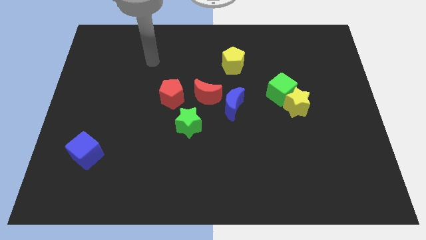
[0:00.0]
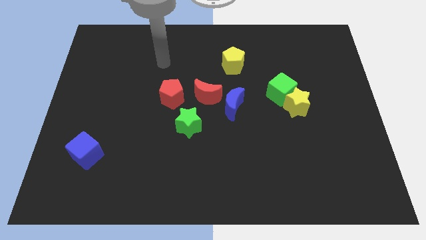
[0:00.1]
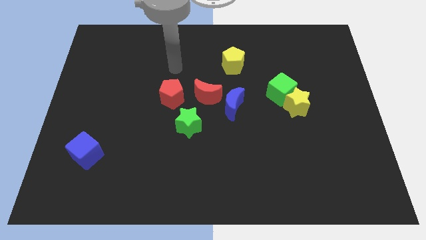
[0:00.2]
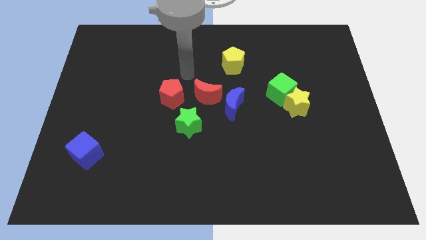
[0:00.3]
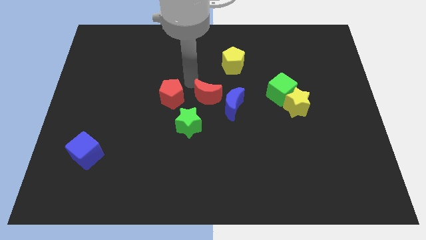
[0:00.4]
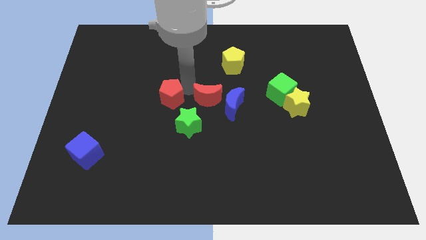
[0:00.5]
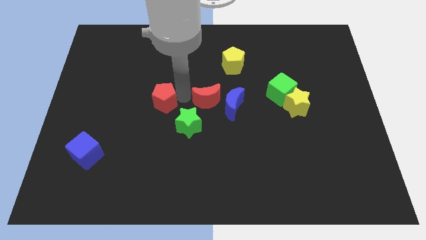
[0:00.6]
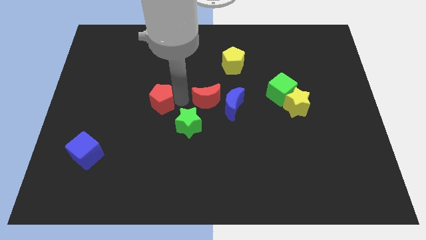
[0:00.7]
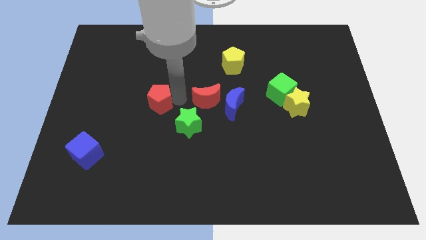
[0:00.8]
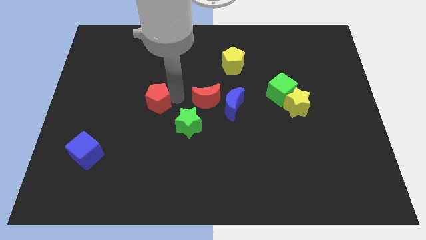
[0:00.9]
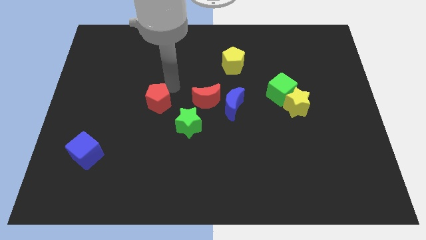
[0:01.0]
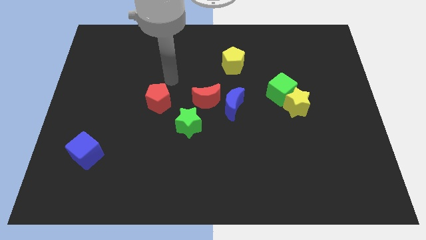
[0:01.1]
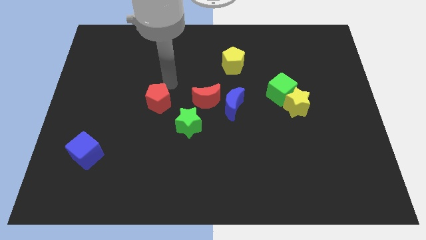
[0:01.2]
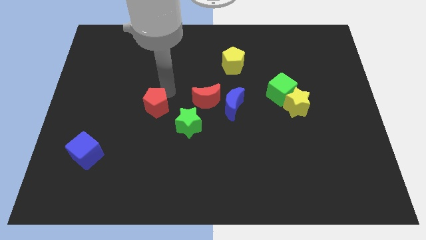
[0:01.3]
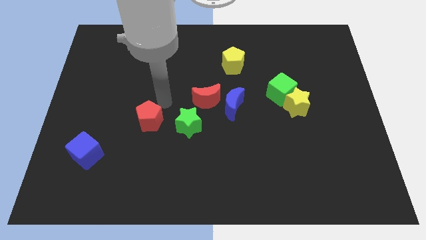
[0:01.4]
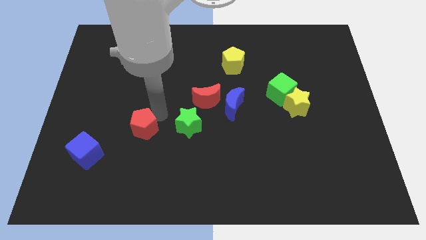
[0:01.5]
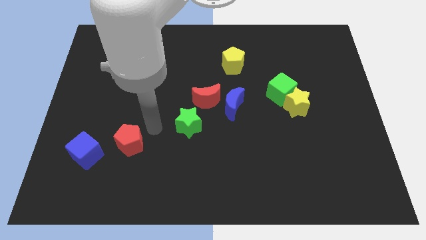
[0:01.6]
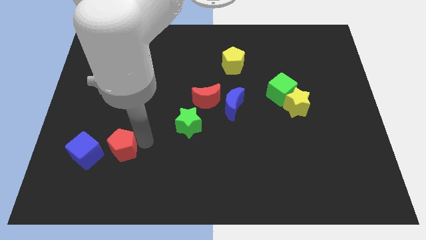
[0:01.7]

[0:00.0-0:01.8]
push the red pentagon towards the blue cube

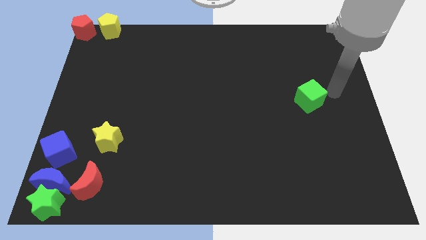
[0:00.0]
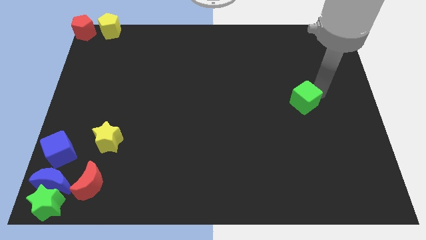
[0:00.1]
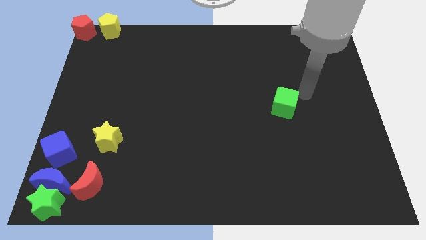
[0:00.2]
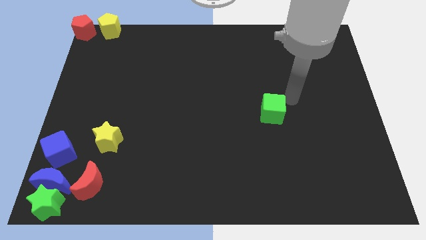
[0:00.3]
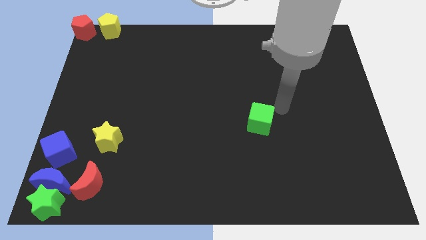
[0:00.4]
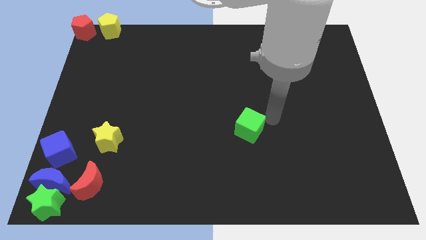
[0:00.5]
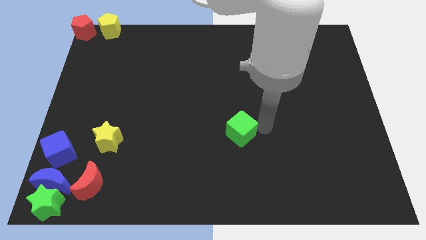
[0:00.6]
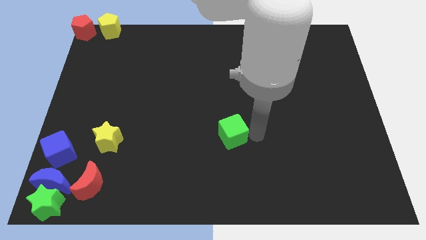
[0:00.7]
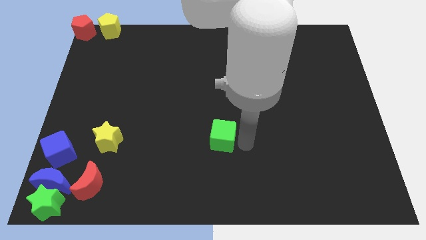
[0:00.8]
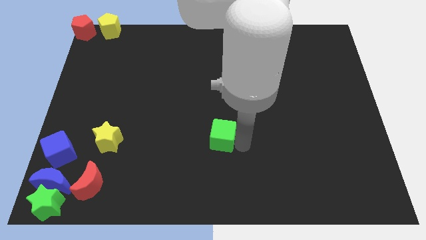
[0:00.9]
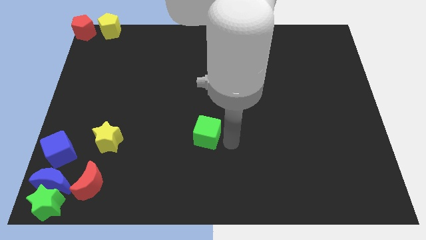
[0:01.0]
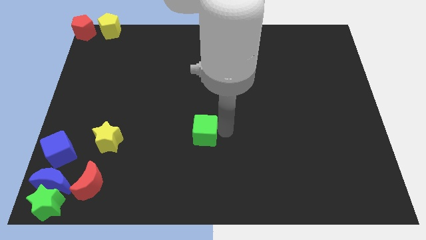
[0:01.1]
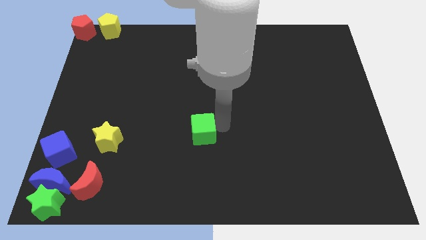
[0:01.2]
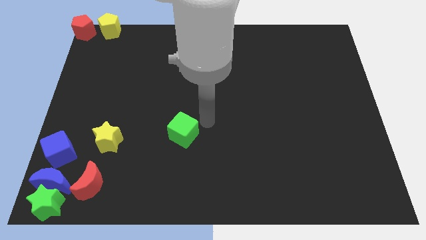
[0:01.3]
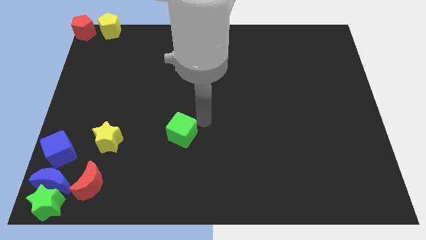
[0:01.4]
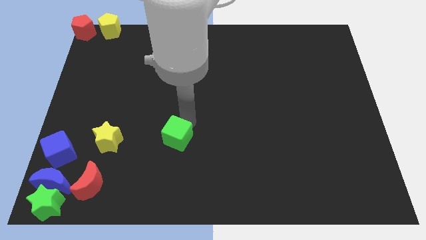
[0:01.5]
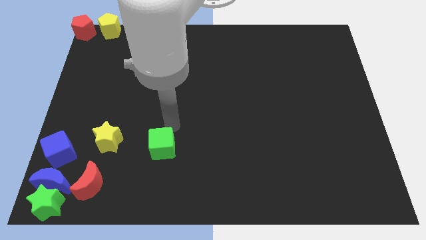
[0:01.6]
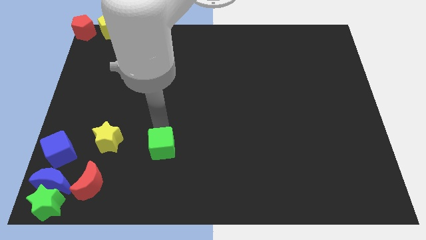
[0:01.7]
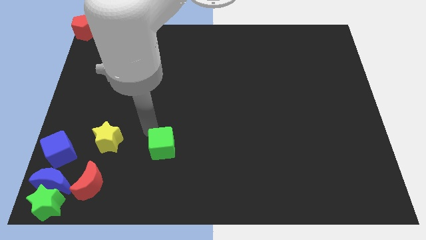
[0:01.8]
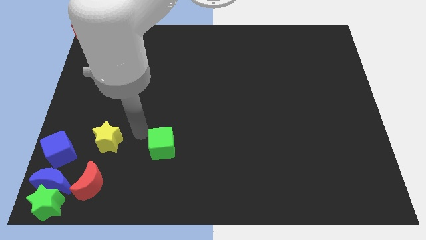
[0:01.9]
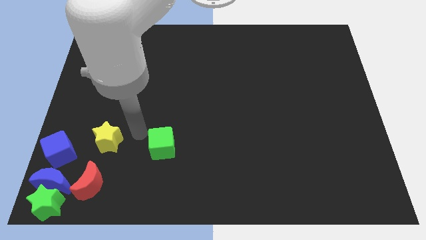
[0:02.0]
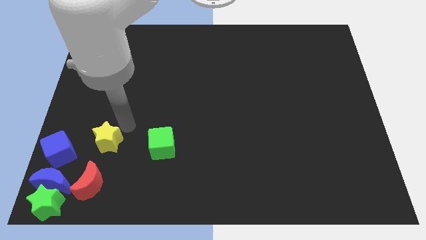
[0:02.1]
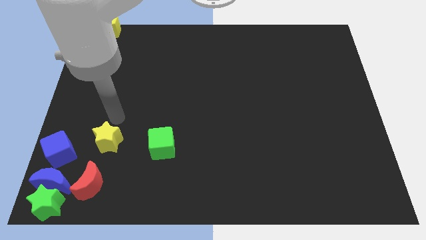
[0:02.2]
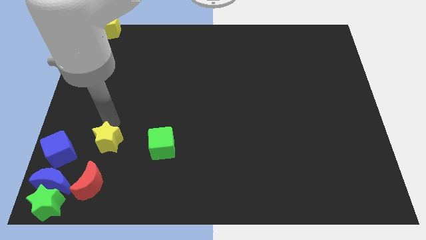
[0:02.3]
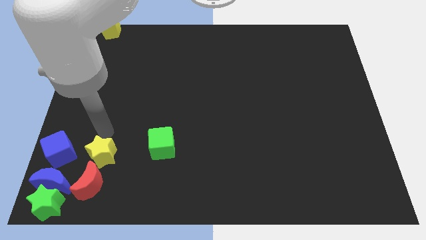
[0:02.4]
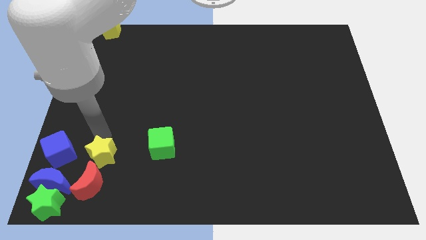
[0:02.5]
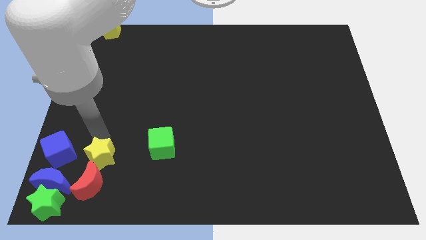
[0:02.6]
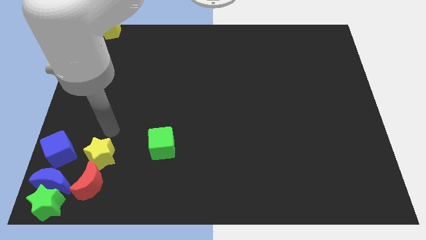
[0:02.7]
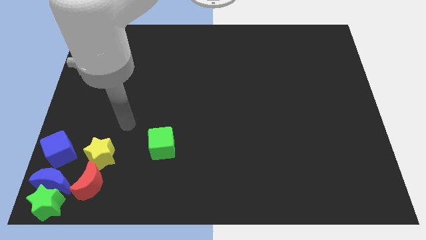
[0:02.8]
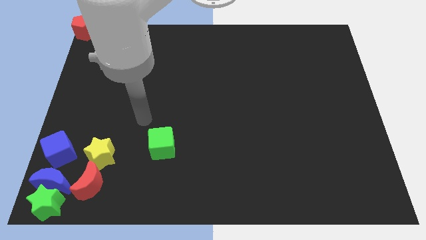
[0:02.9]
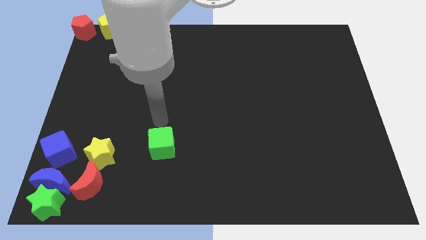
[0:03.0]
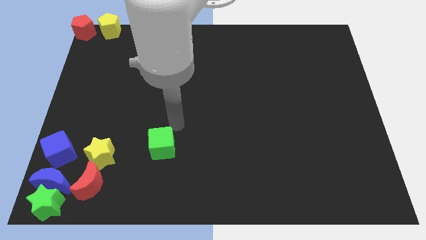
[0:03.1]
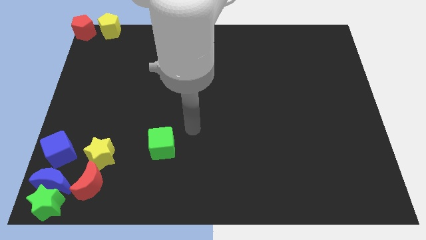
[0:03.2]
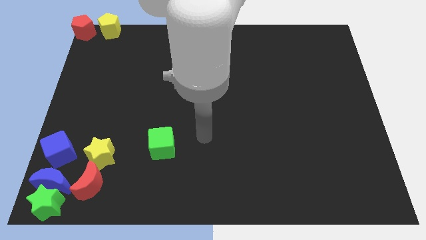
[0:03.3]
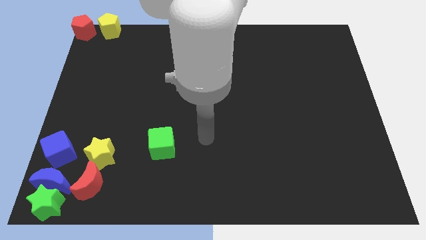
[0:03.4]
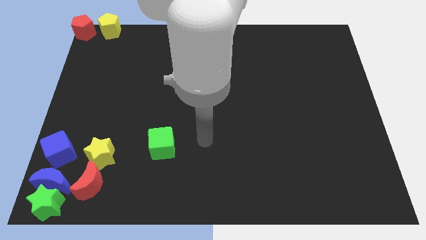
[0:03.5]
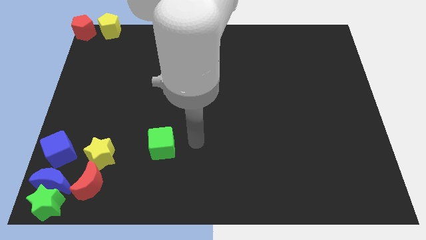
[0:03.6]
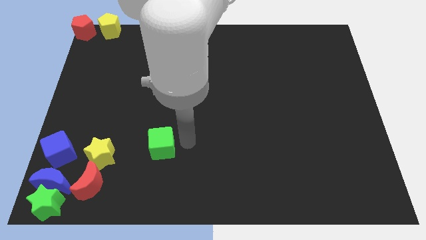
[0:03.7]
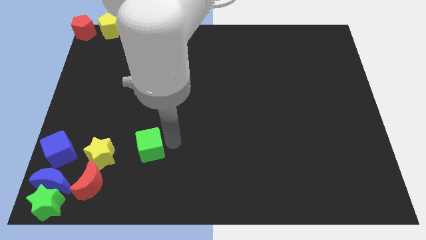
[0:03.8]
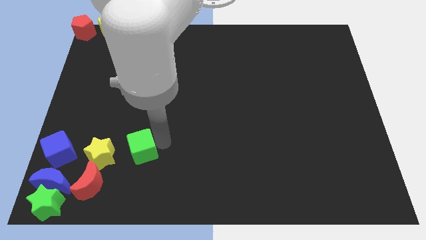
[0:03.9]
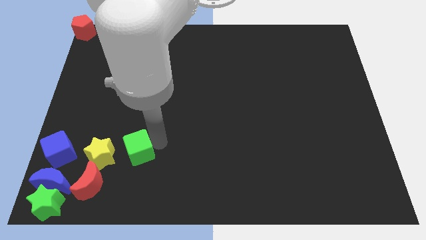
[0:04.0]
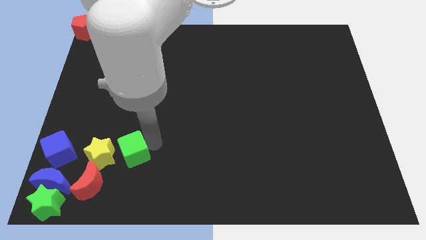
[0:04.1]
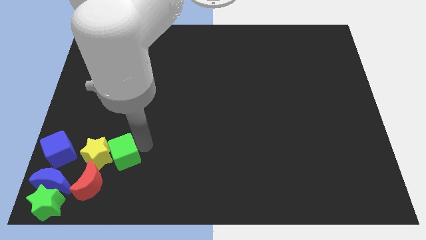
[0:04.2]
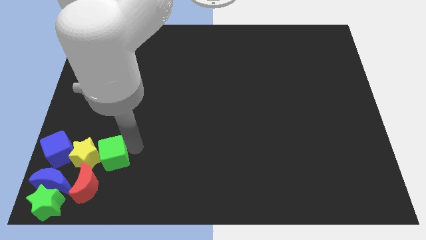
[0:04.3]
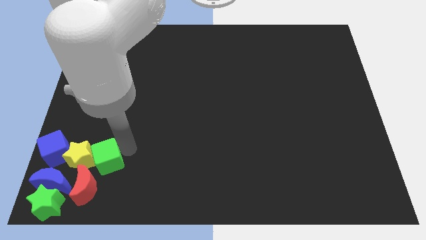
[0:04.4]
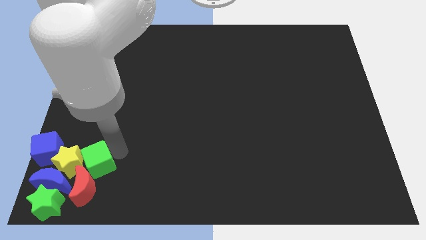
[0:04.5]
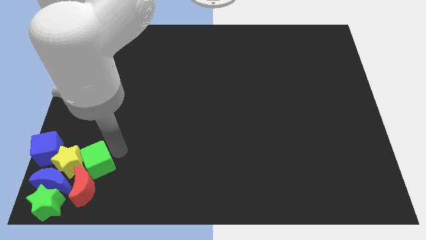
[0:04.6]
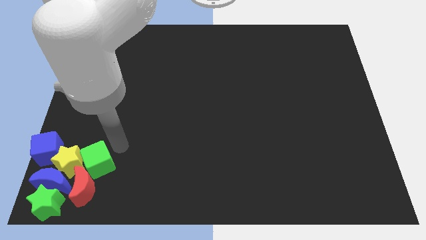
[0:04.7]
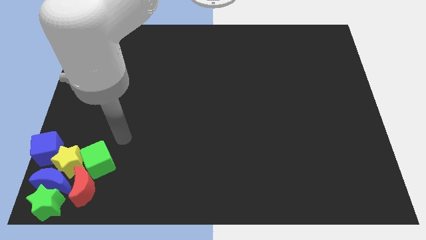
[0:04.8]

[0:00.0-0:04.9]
push the green cube into the yellow star

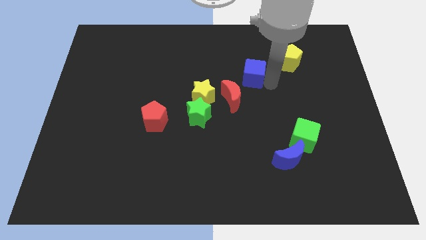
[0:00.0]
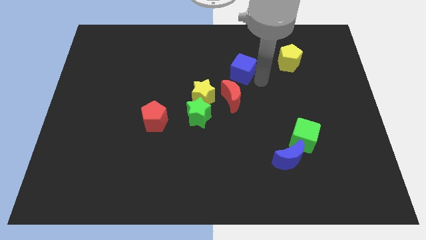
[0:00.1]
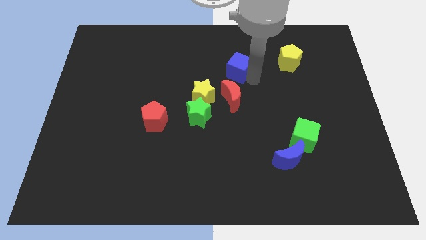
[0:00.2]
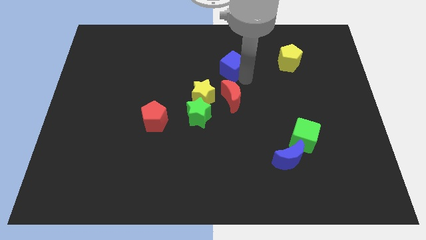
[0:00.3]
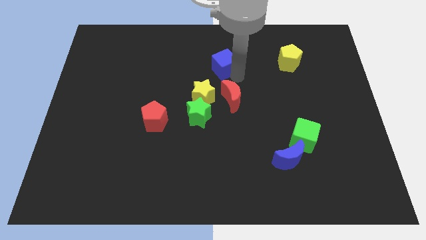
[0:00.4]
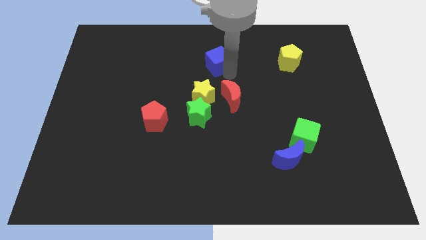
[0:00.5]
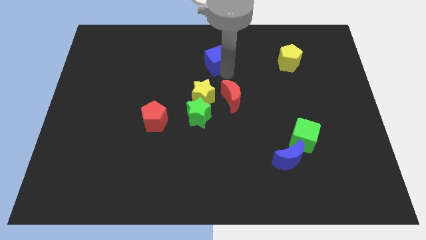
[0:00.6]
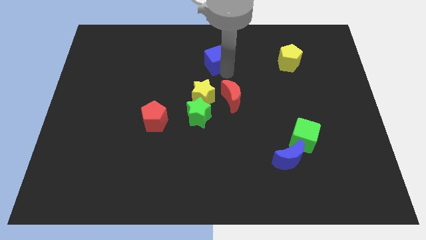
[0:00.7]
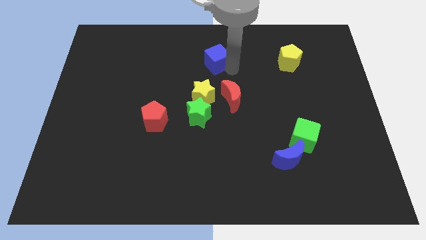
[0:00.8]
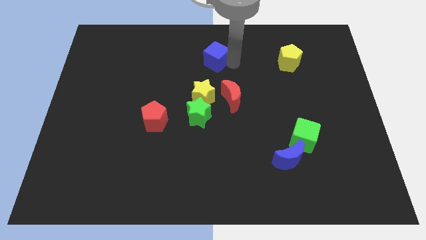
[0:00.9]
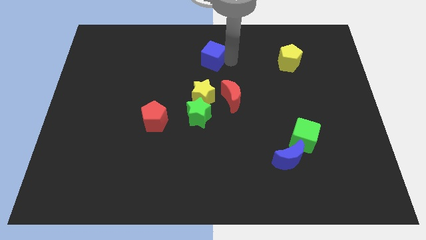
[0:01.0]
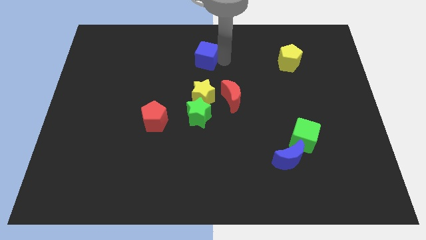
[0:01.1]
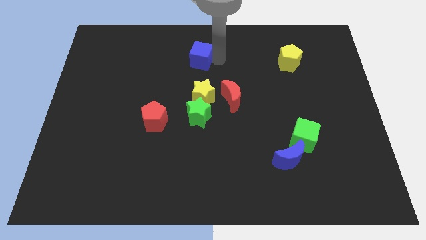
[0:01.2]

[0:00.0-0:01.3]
place blue cube above yellow star

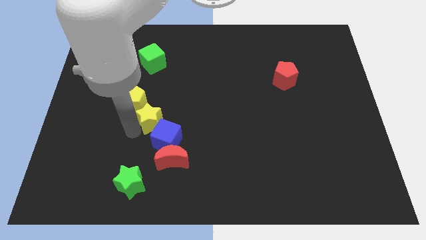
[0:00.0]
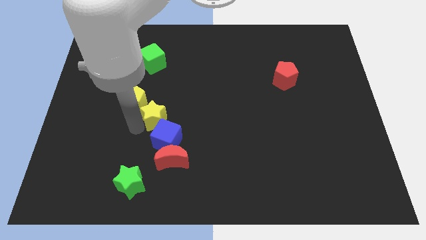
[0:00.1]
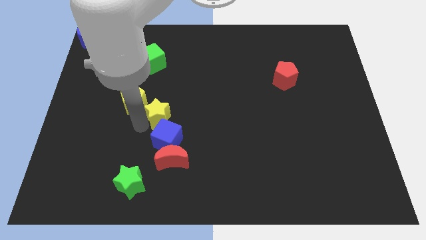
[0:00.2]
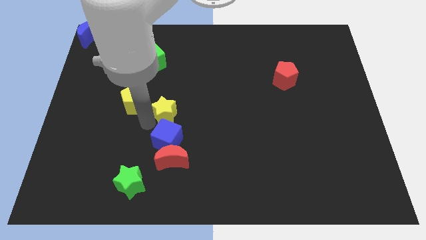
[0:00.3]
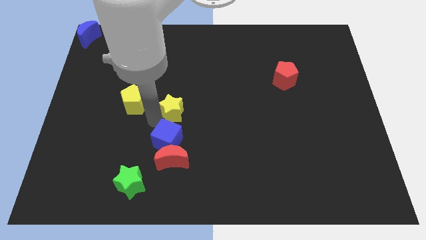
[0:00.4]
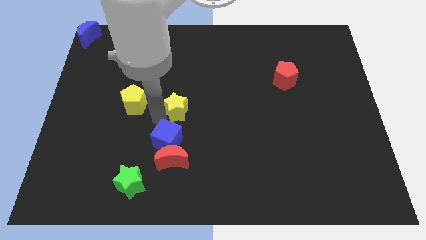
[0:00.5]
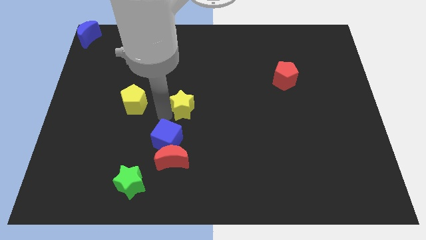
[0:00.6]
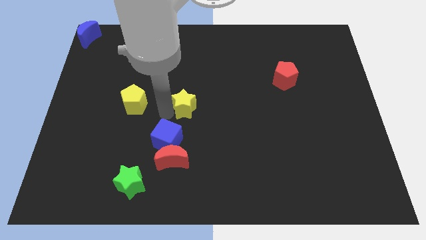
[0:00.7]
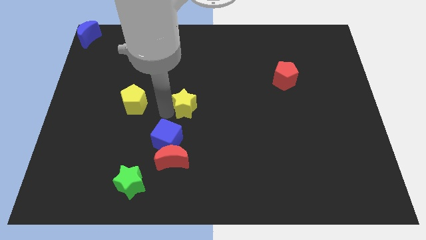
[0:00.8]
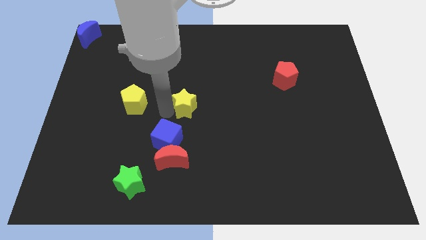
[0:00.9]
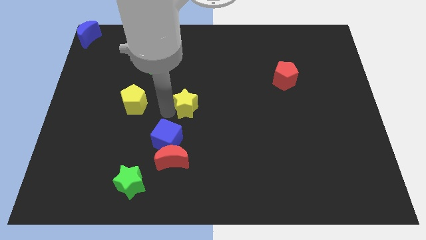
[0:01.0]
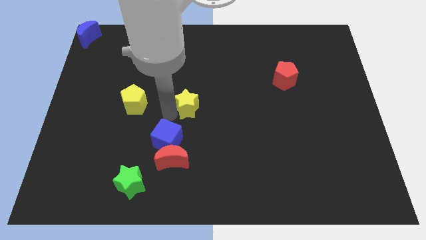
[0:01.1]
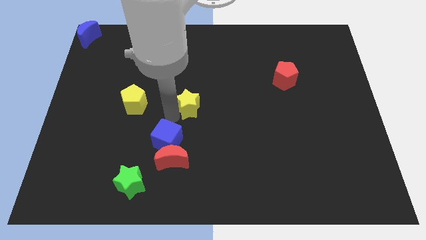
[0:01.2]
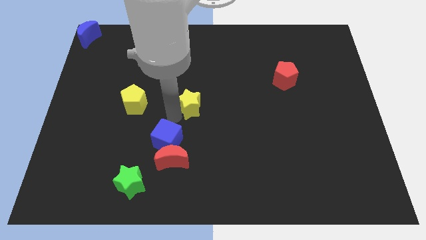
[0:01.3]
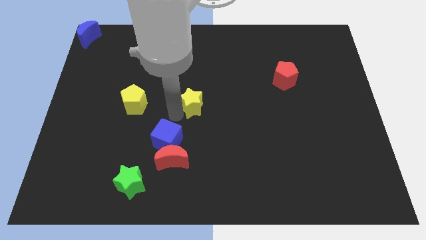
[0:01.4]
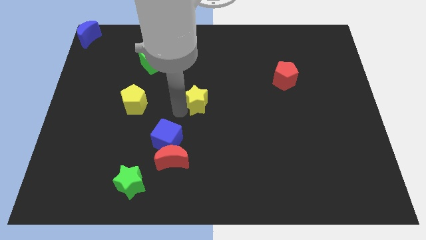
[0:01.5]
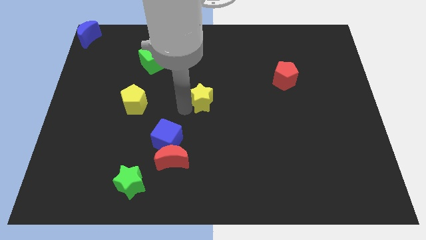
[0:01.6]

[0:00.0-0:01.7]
place the yellow star to the right of yellow pentagon
